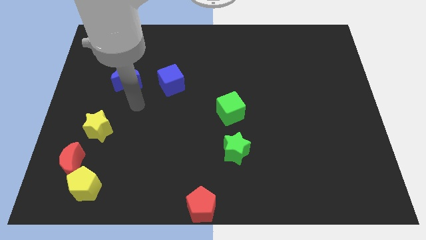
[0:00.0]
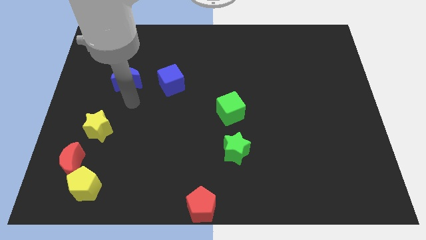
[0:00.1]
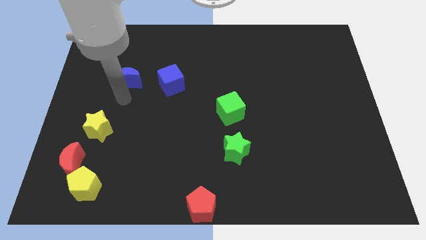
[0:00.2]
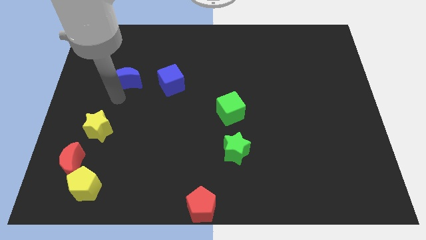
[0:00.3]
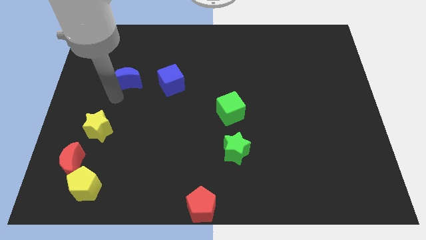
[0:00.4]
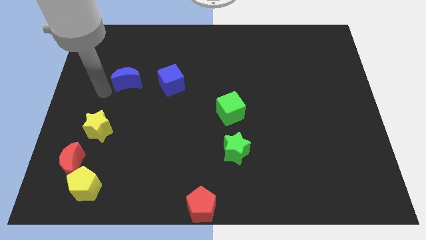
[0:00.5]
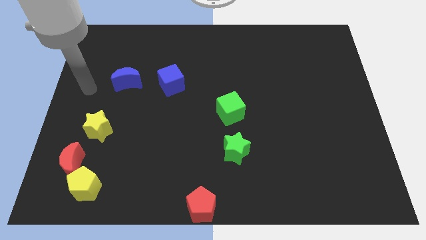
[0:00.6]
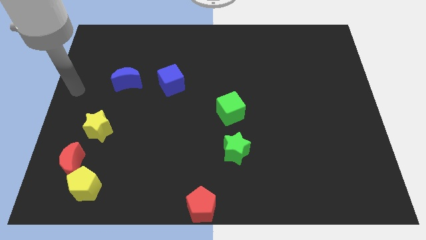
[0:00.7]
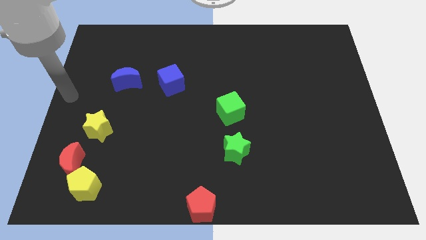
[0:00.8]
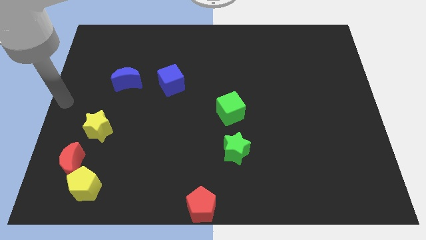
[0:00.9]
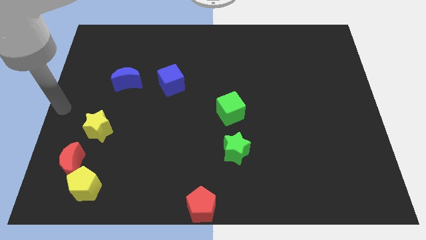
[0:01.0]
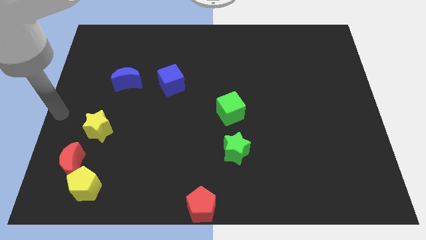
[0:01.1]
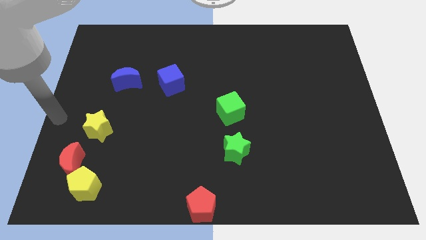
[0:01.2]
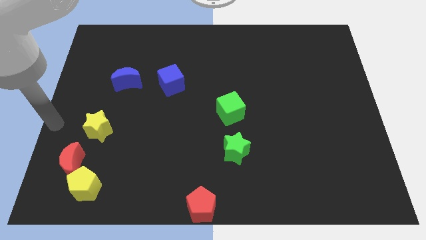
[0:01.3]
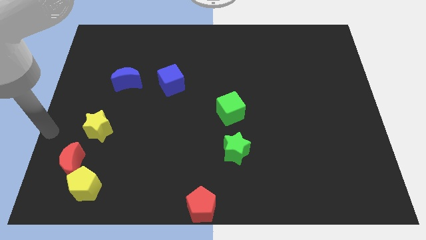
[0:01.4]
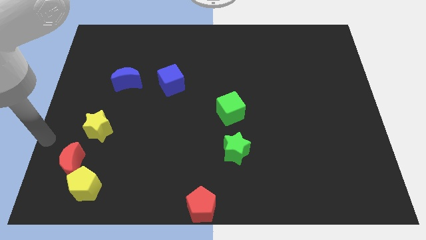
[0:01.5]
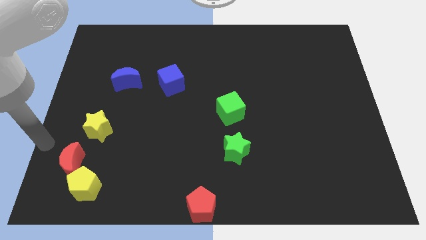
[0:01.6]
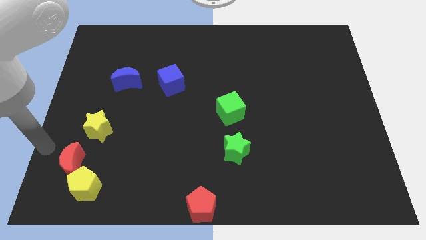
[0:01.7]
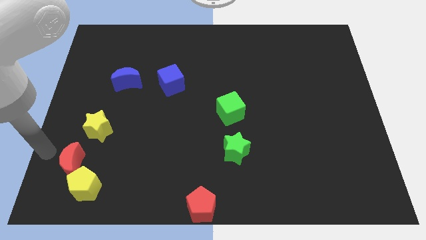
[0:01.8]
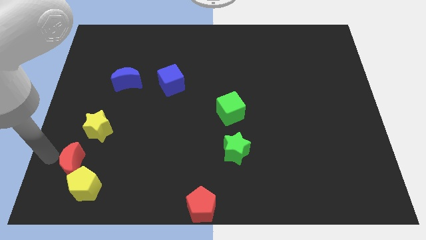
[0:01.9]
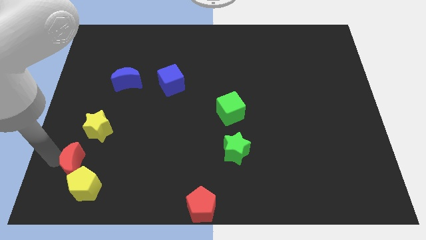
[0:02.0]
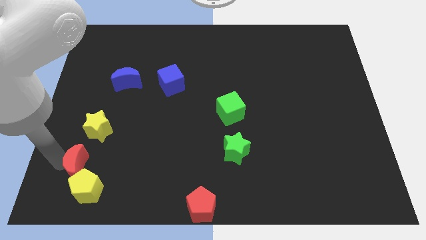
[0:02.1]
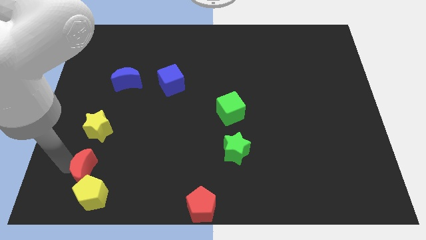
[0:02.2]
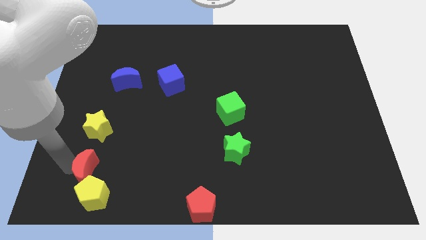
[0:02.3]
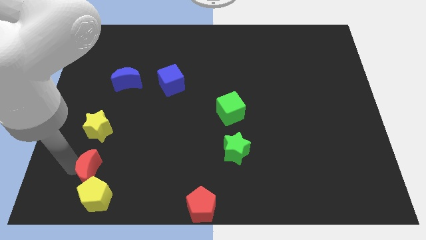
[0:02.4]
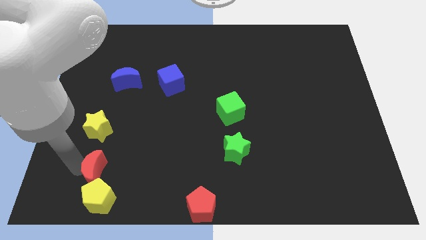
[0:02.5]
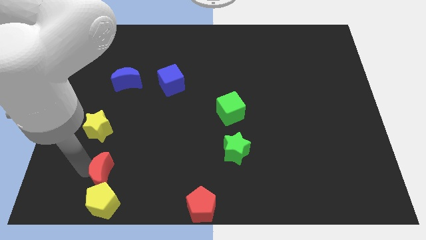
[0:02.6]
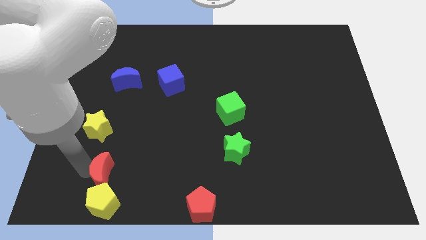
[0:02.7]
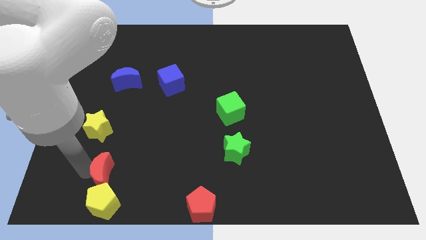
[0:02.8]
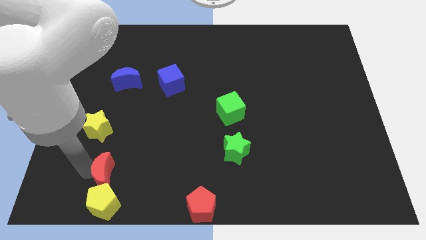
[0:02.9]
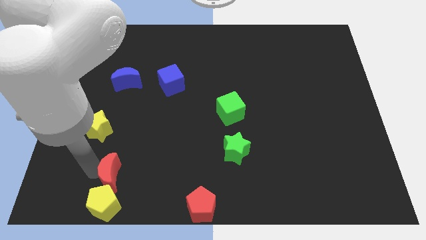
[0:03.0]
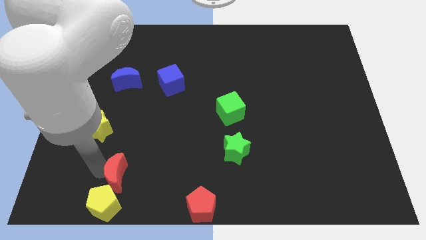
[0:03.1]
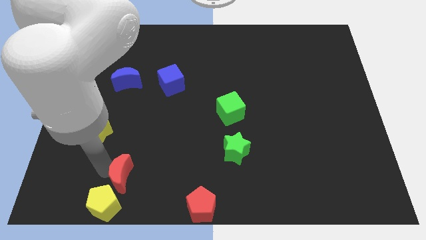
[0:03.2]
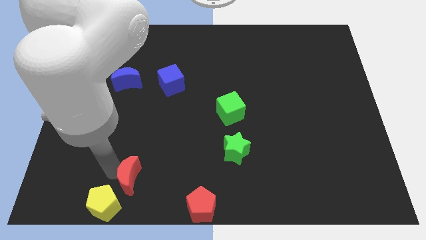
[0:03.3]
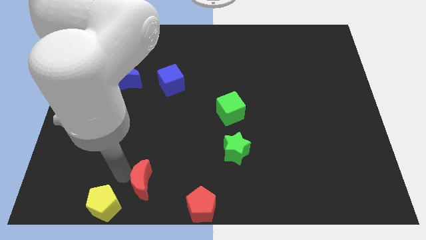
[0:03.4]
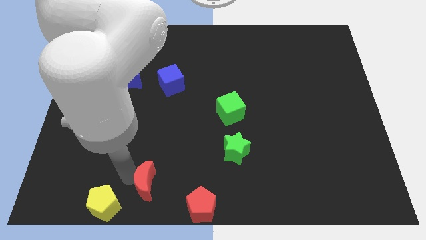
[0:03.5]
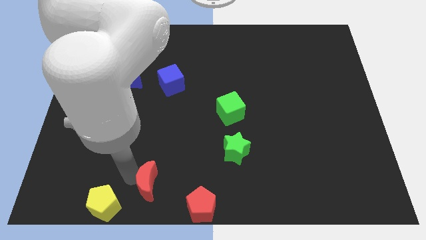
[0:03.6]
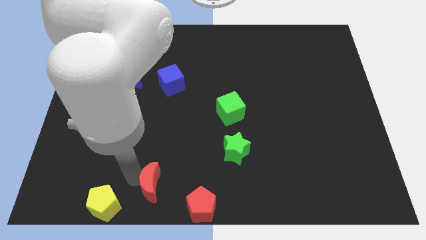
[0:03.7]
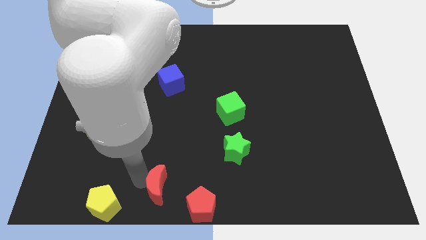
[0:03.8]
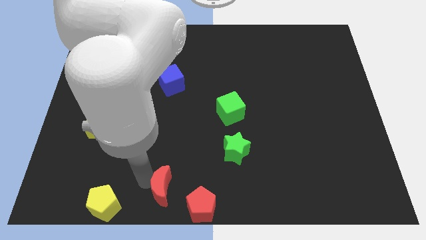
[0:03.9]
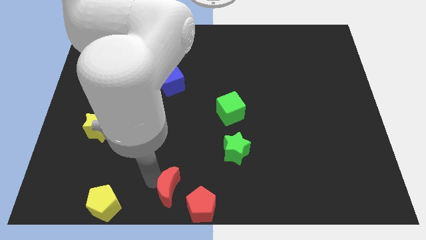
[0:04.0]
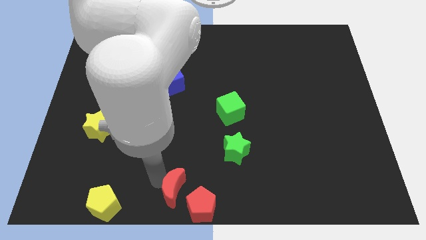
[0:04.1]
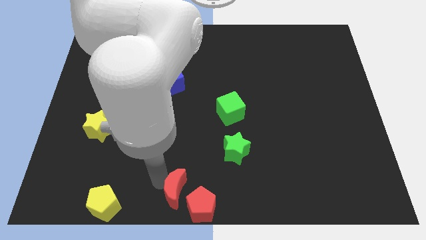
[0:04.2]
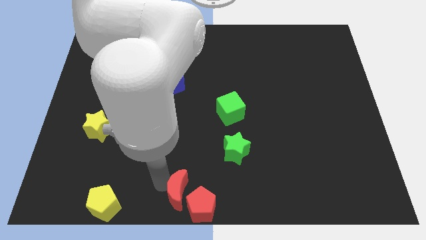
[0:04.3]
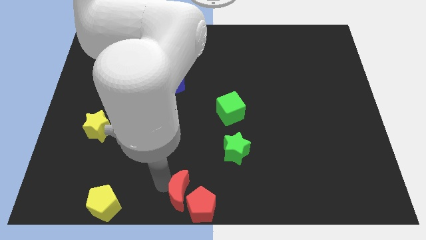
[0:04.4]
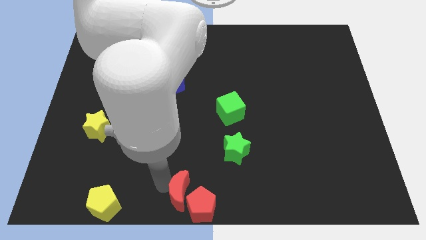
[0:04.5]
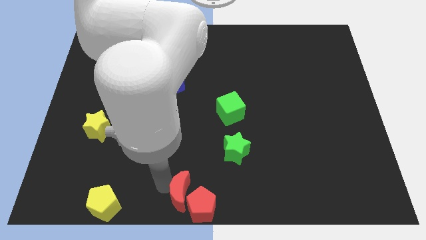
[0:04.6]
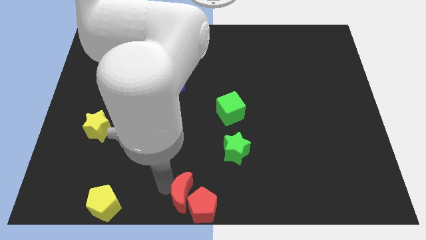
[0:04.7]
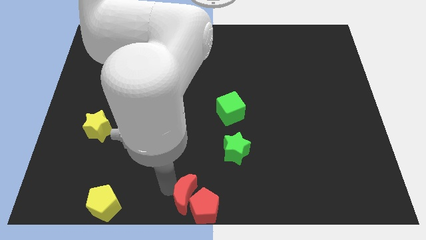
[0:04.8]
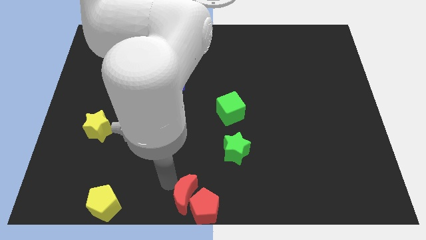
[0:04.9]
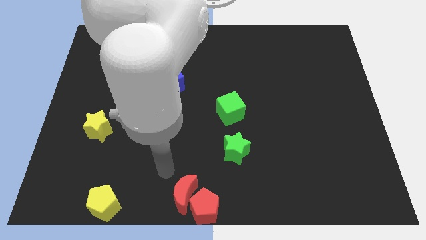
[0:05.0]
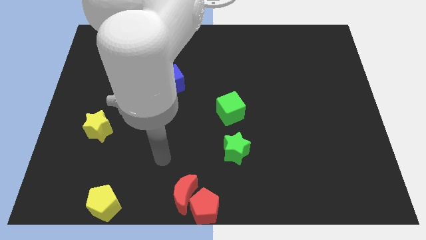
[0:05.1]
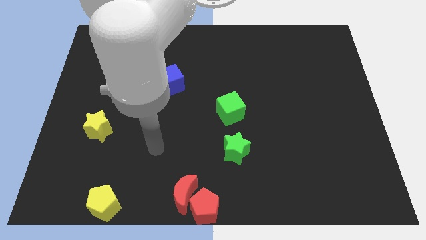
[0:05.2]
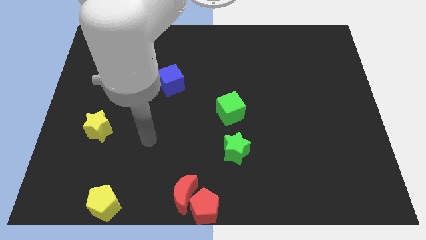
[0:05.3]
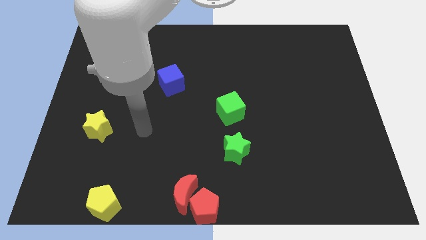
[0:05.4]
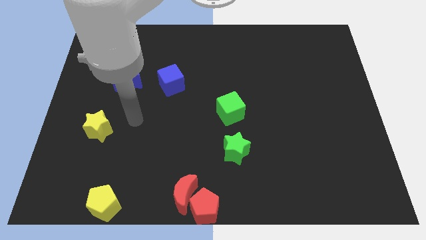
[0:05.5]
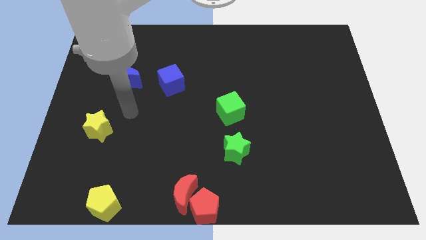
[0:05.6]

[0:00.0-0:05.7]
put the red moon at the left side of the red pentagon

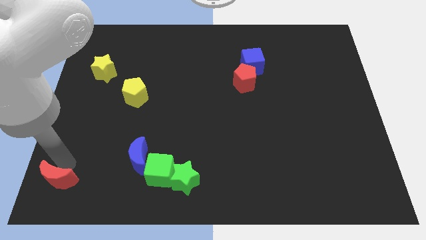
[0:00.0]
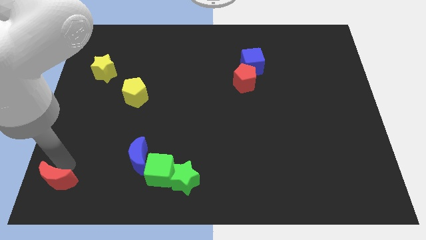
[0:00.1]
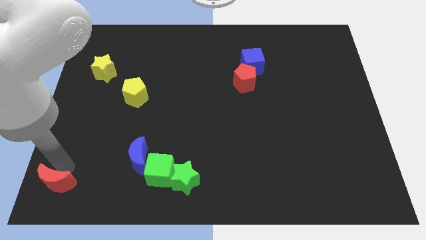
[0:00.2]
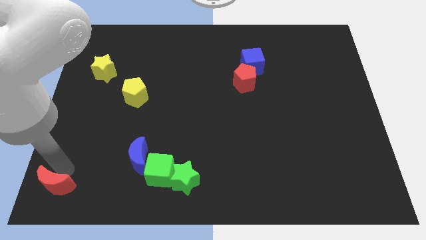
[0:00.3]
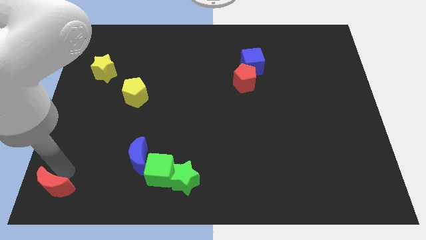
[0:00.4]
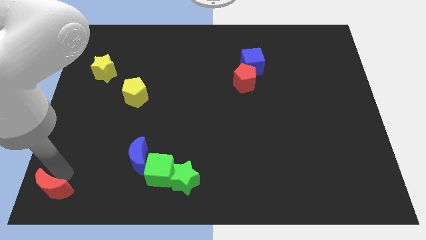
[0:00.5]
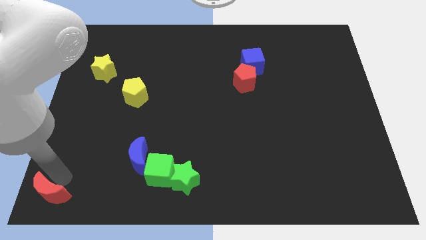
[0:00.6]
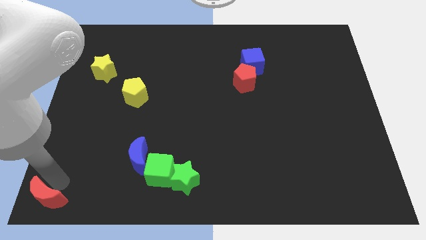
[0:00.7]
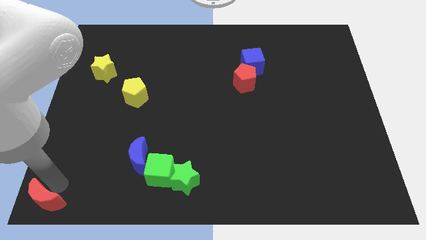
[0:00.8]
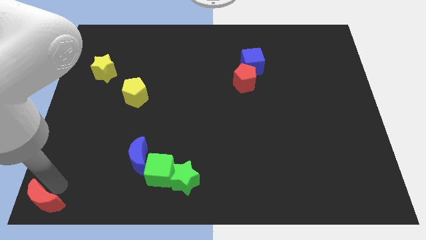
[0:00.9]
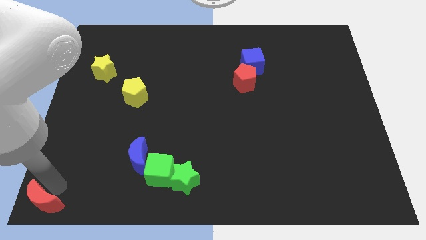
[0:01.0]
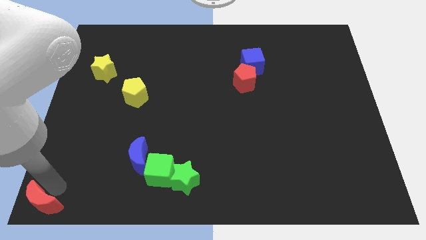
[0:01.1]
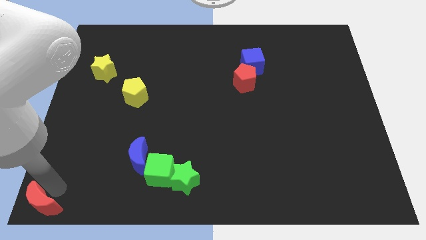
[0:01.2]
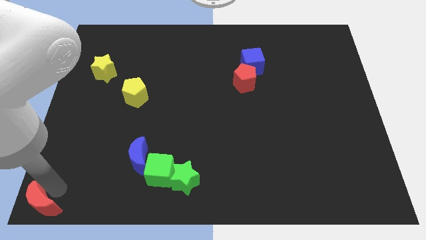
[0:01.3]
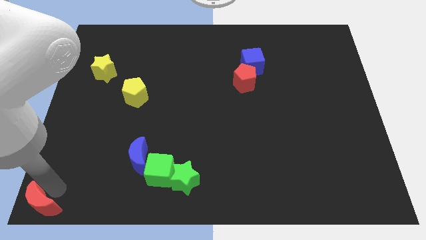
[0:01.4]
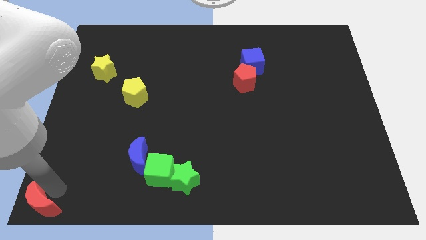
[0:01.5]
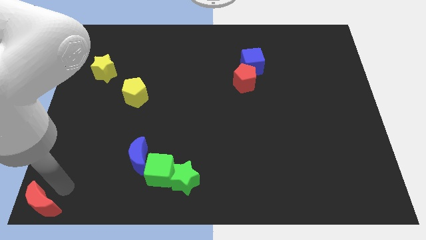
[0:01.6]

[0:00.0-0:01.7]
move red moon towards bottom left corner of the board

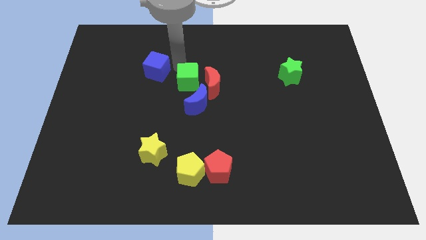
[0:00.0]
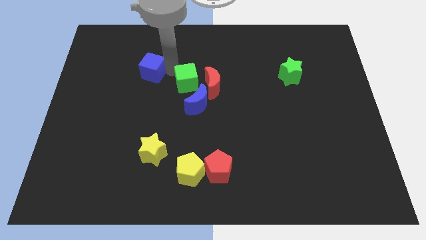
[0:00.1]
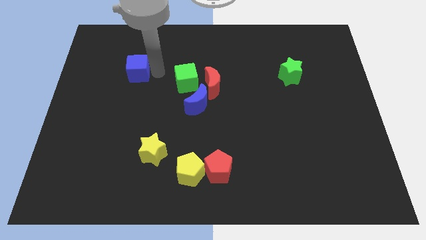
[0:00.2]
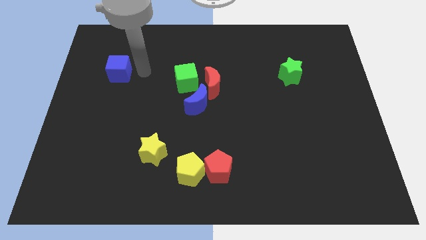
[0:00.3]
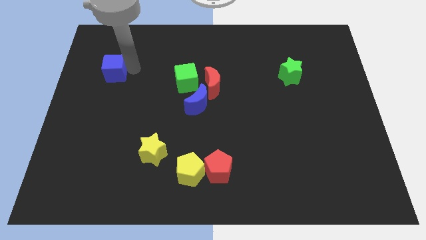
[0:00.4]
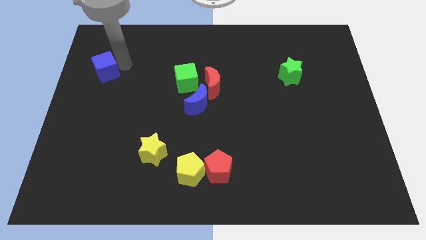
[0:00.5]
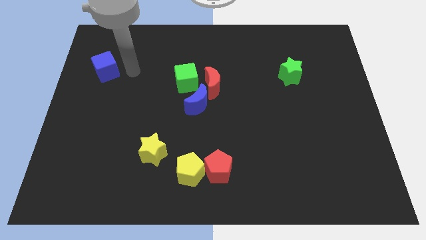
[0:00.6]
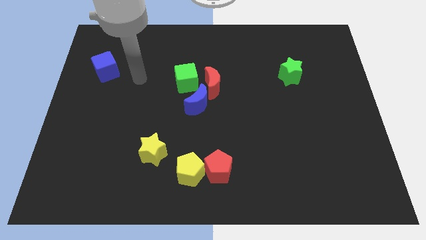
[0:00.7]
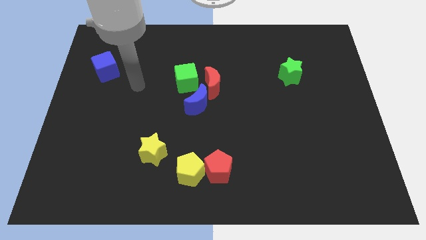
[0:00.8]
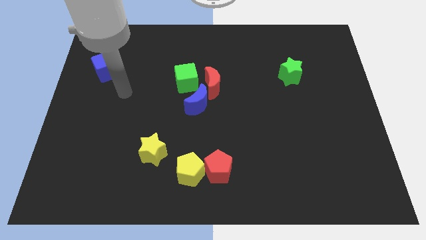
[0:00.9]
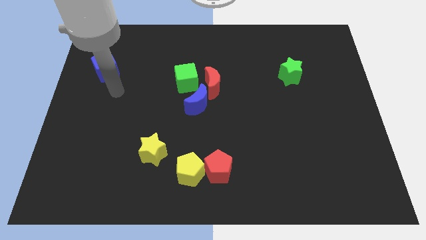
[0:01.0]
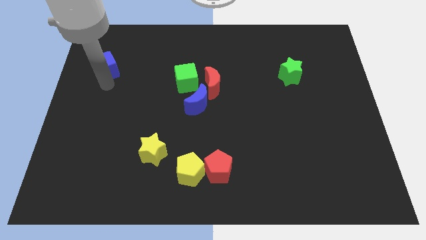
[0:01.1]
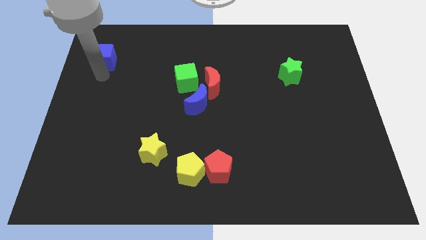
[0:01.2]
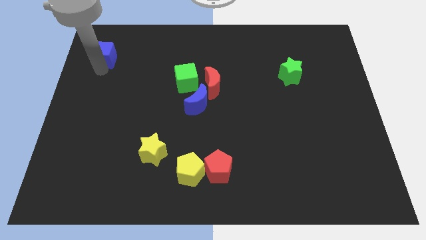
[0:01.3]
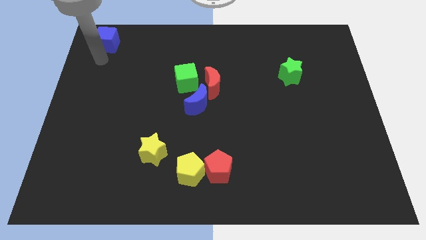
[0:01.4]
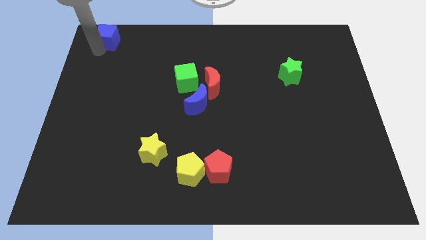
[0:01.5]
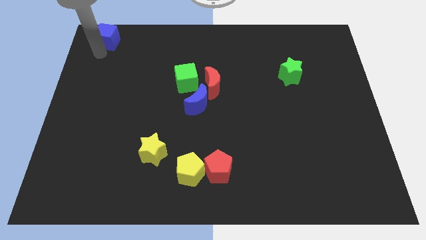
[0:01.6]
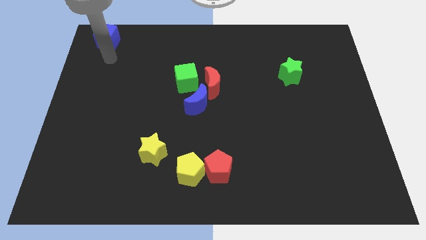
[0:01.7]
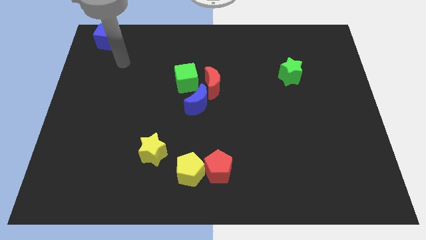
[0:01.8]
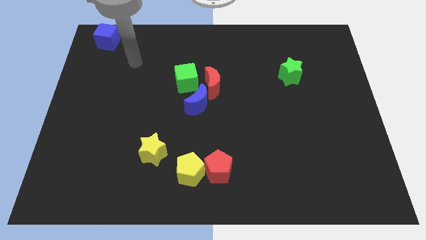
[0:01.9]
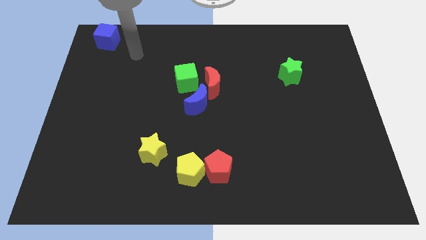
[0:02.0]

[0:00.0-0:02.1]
move the blue cube towards top left side
